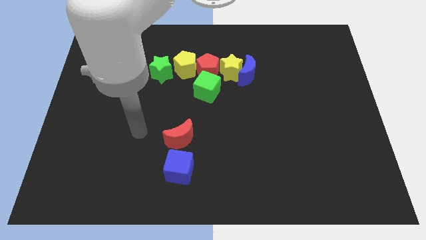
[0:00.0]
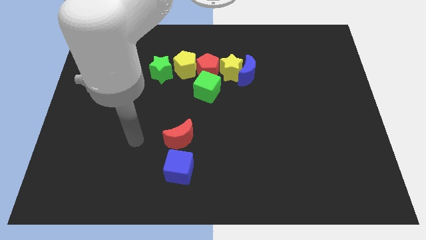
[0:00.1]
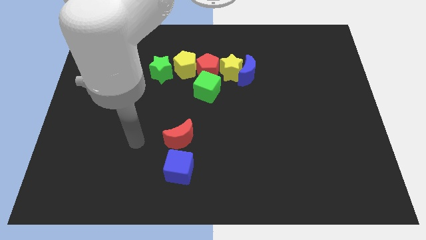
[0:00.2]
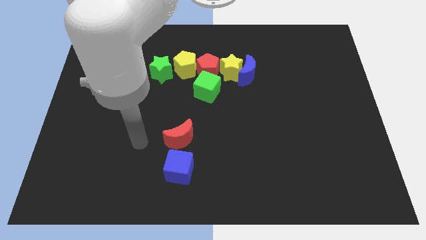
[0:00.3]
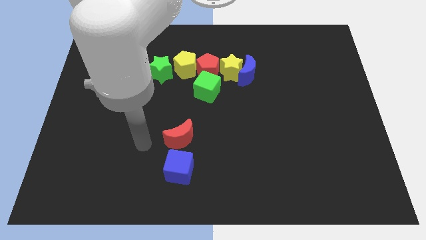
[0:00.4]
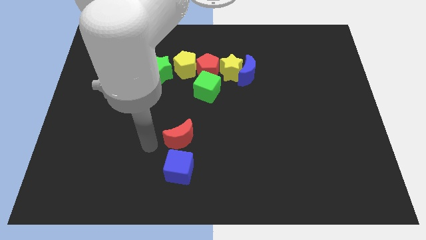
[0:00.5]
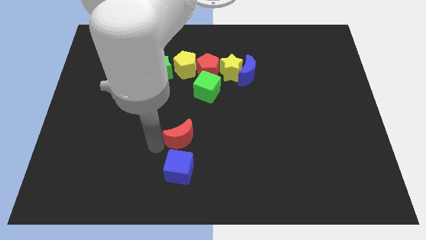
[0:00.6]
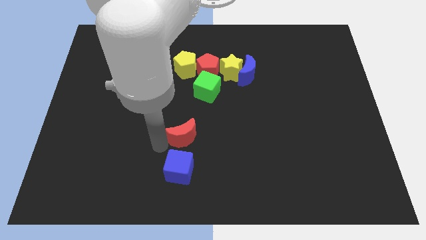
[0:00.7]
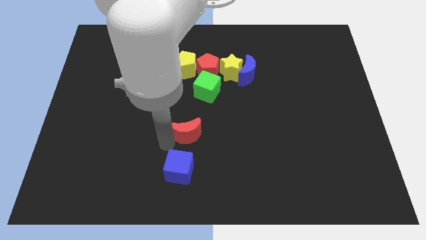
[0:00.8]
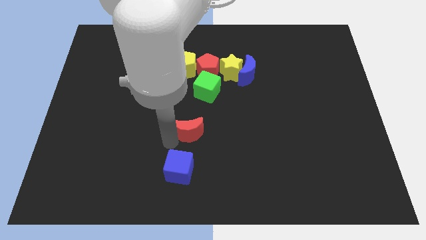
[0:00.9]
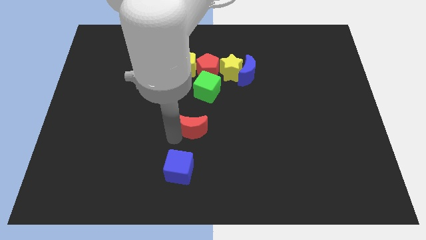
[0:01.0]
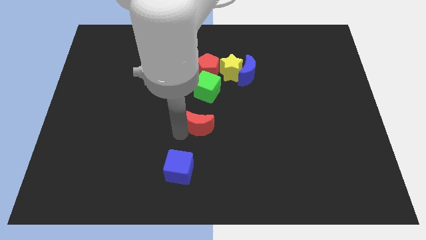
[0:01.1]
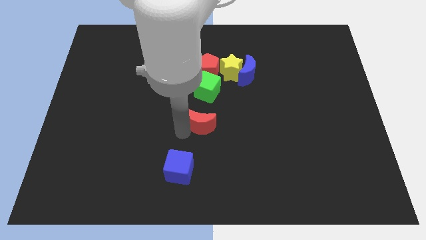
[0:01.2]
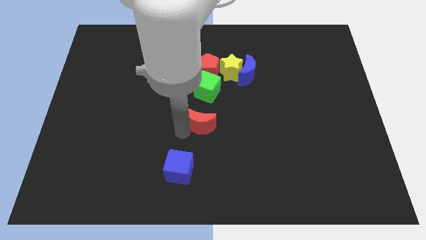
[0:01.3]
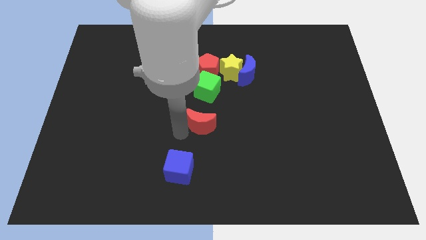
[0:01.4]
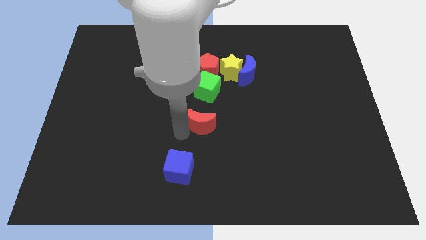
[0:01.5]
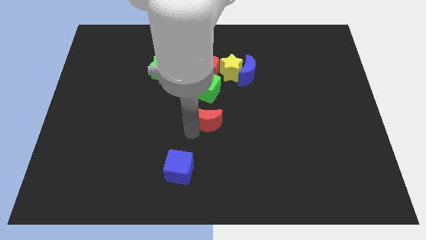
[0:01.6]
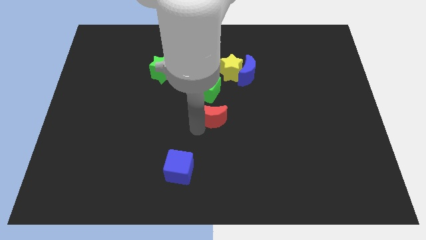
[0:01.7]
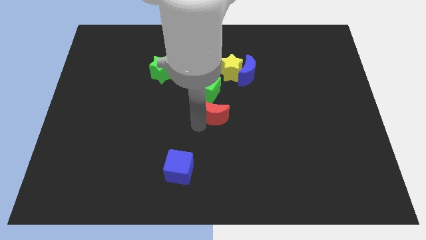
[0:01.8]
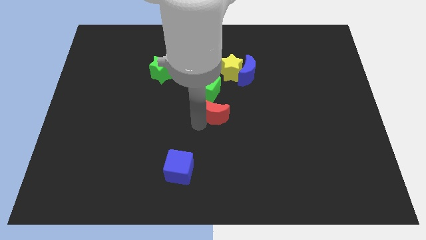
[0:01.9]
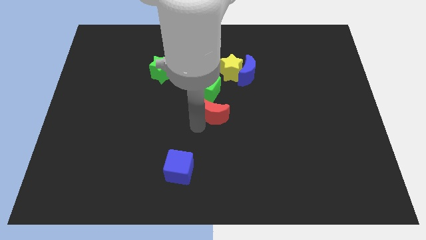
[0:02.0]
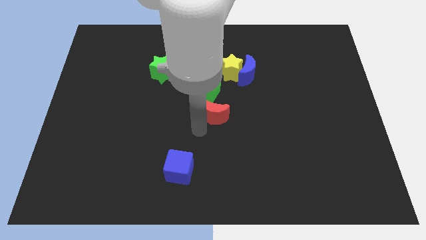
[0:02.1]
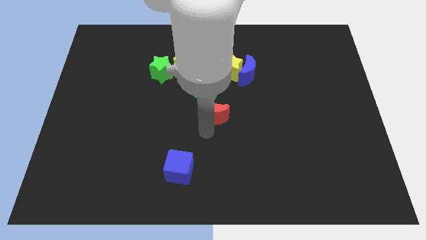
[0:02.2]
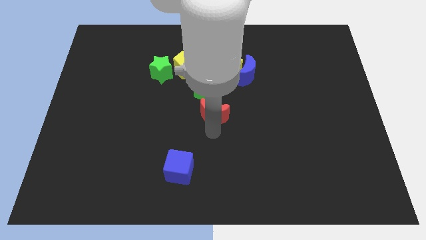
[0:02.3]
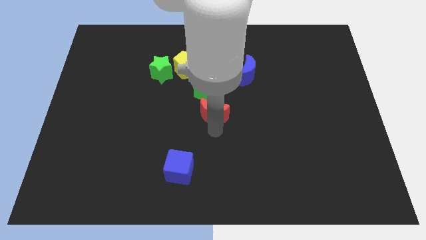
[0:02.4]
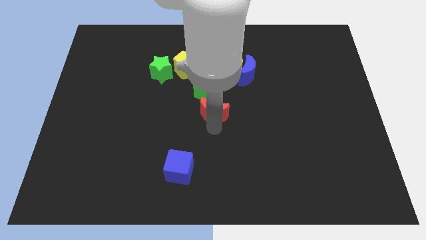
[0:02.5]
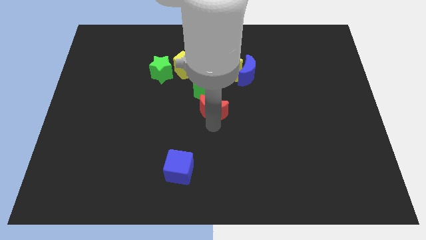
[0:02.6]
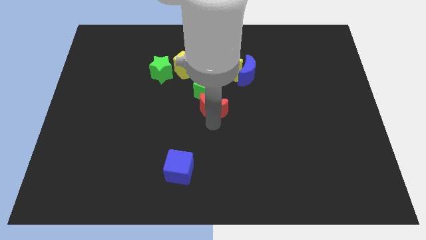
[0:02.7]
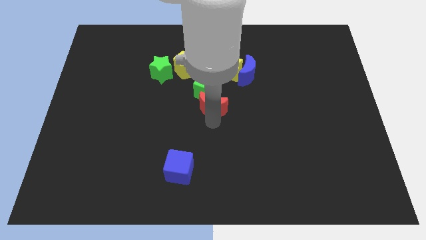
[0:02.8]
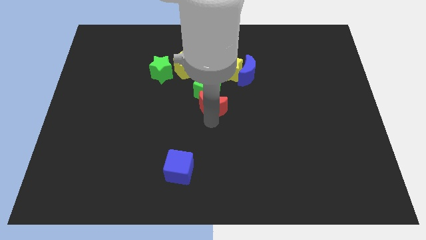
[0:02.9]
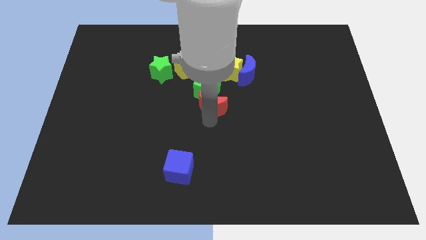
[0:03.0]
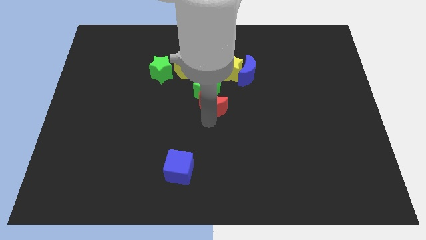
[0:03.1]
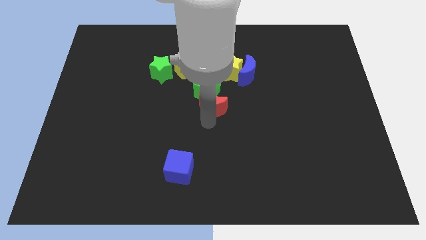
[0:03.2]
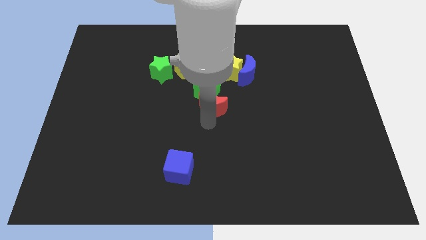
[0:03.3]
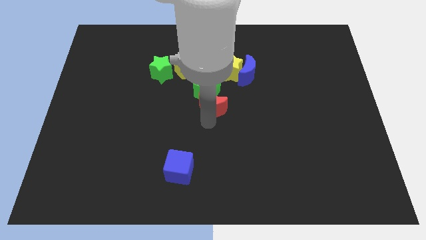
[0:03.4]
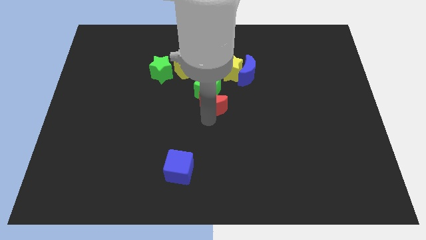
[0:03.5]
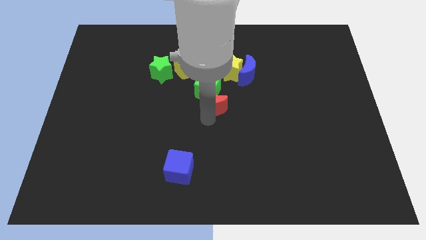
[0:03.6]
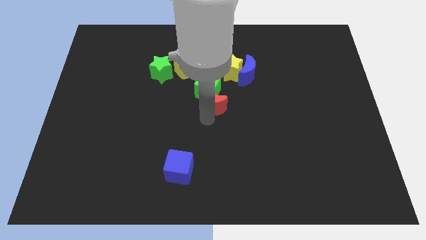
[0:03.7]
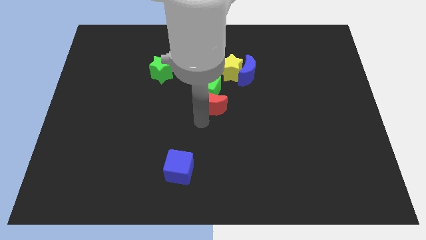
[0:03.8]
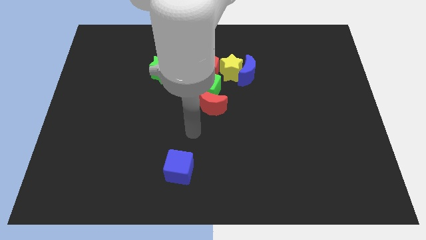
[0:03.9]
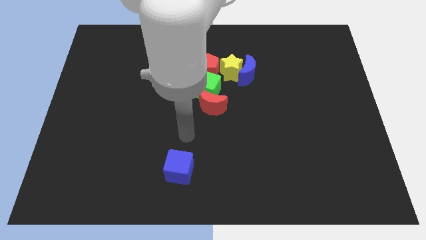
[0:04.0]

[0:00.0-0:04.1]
place the red crescent below the green cube

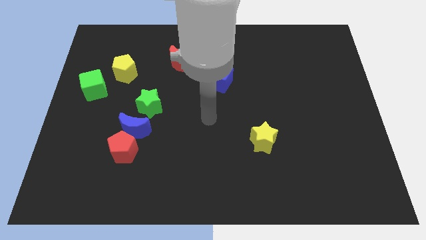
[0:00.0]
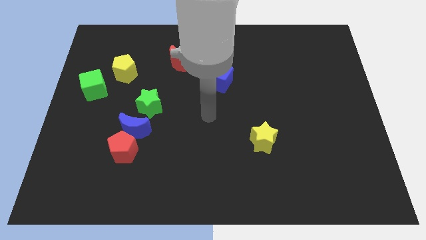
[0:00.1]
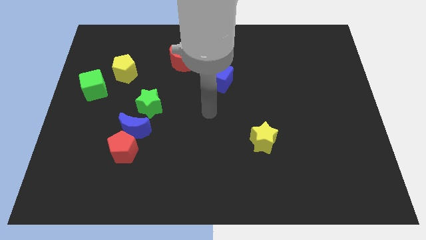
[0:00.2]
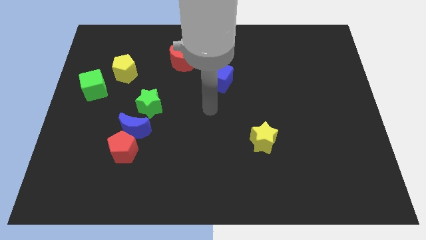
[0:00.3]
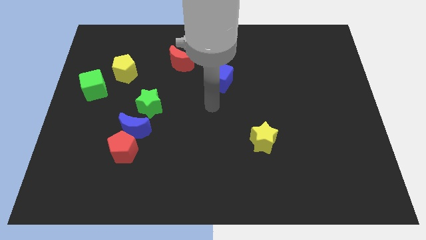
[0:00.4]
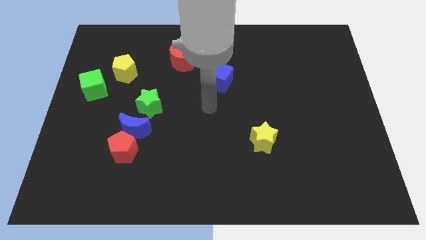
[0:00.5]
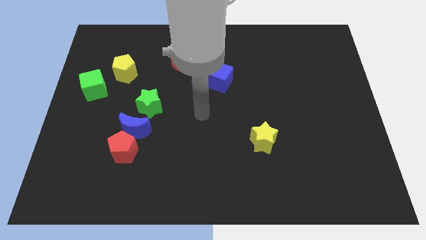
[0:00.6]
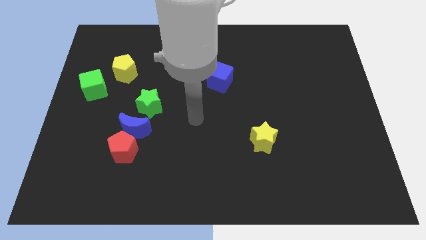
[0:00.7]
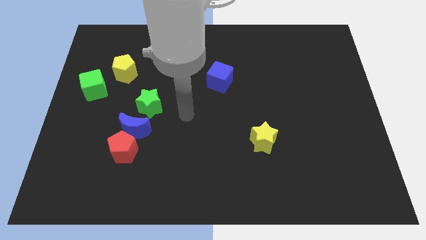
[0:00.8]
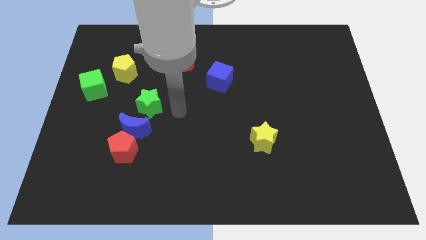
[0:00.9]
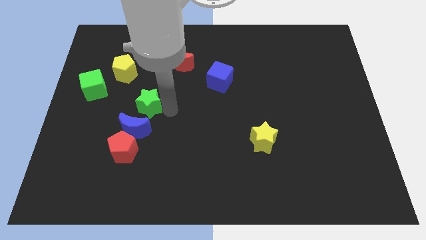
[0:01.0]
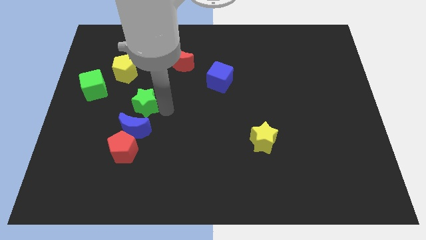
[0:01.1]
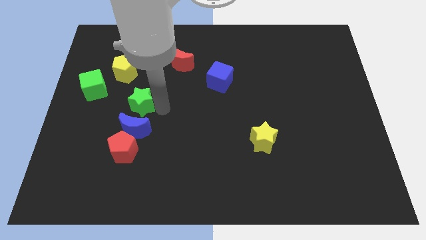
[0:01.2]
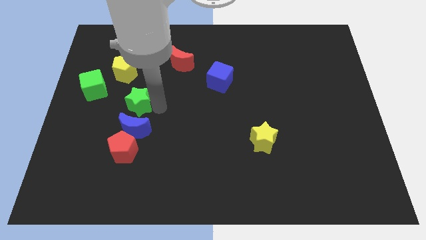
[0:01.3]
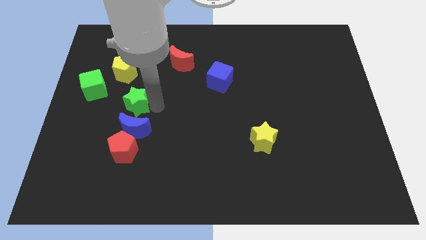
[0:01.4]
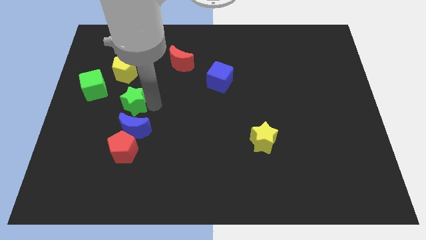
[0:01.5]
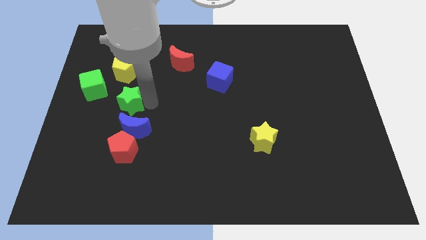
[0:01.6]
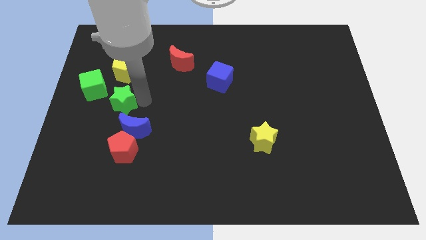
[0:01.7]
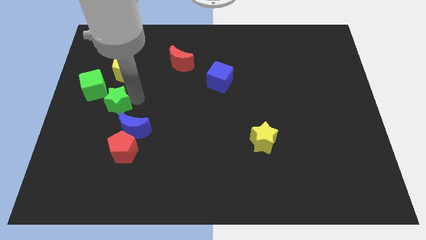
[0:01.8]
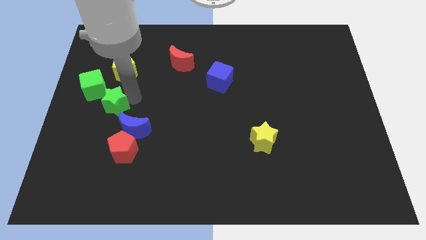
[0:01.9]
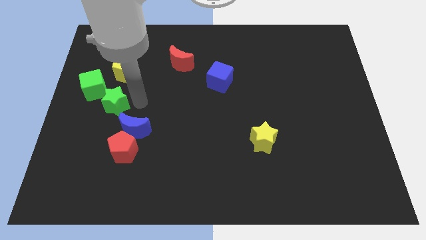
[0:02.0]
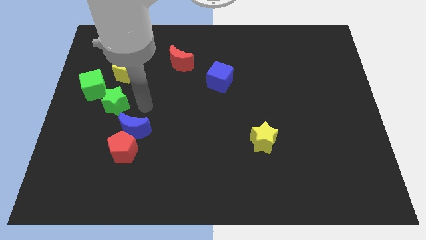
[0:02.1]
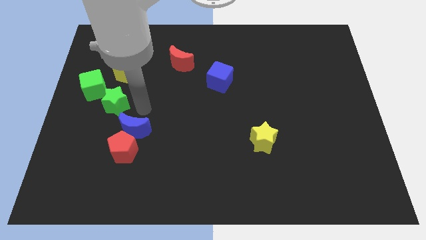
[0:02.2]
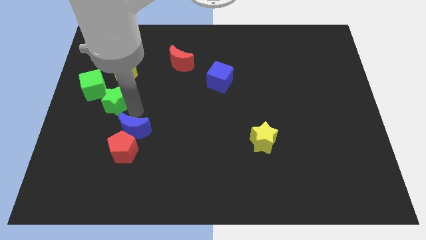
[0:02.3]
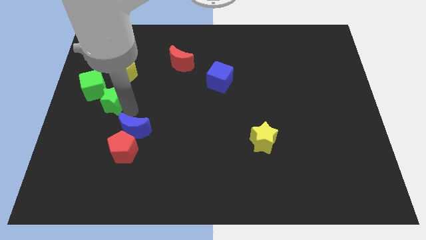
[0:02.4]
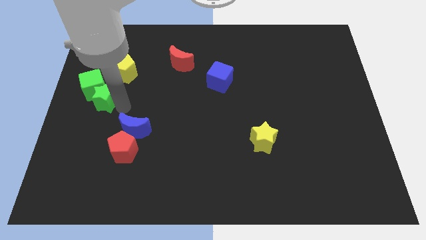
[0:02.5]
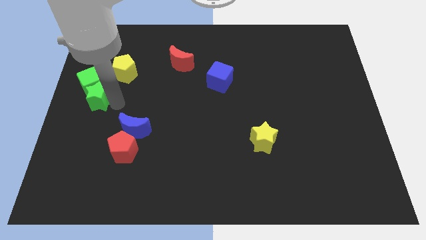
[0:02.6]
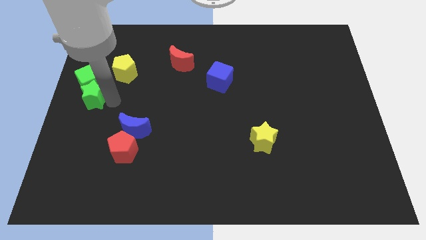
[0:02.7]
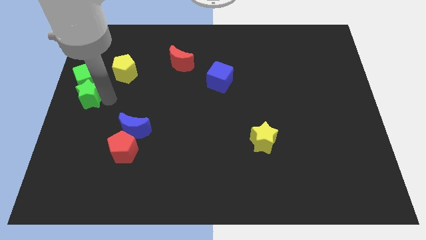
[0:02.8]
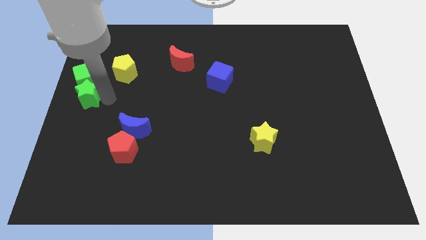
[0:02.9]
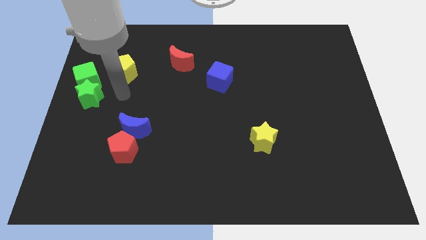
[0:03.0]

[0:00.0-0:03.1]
move the green star to the center left of the board

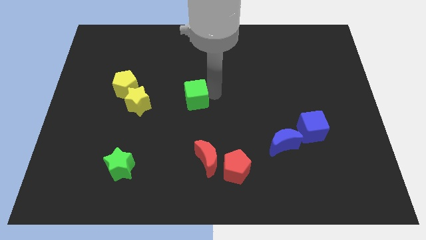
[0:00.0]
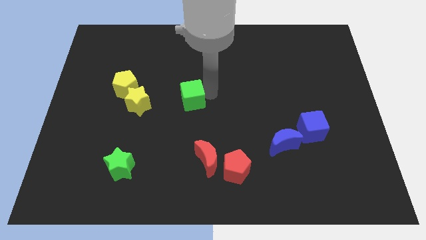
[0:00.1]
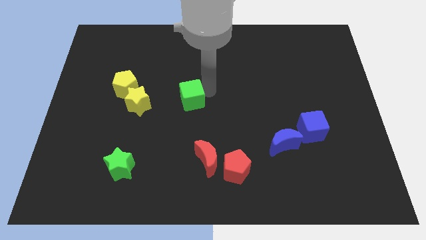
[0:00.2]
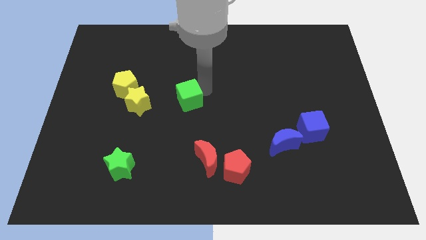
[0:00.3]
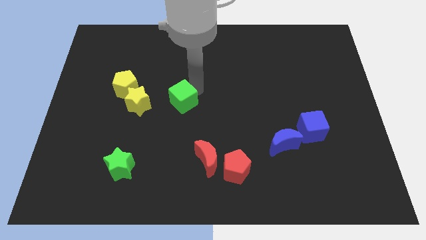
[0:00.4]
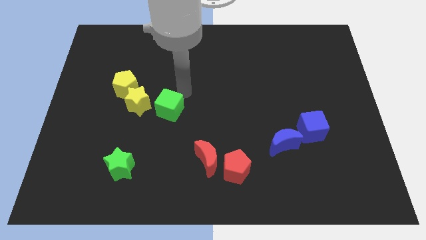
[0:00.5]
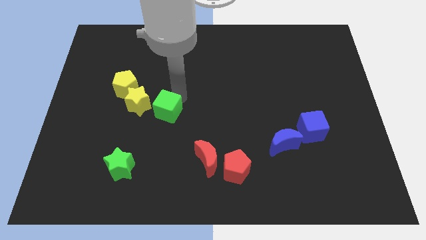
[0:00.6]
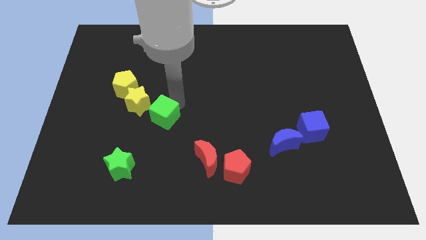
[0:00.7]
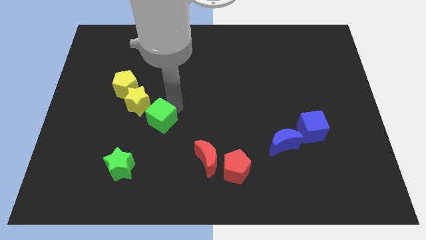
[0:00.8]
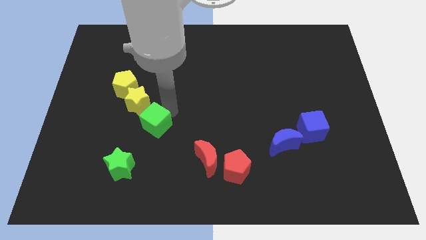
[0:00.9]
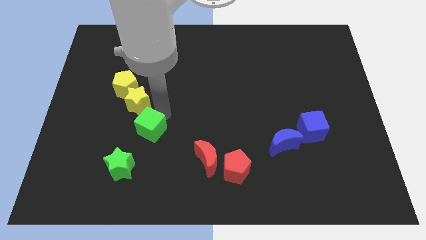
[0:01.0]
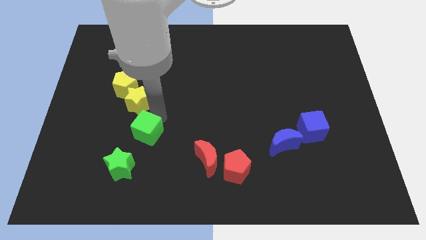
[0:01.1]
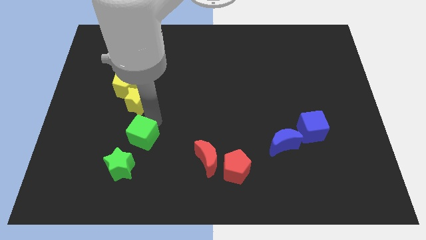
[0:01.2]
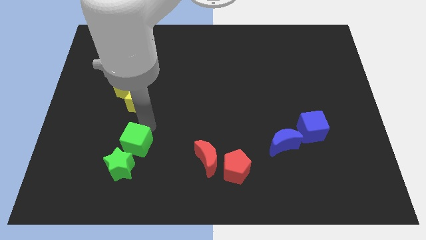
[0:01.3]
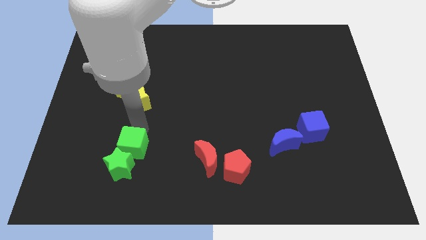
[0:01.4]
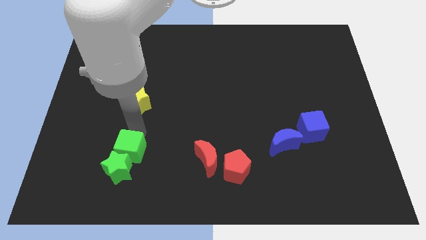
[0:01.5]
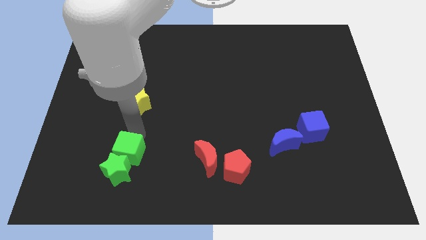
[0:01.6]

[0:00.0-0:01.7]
move the green cube into the green star
